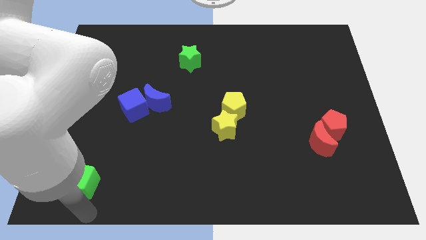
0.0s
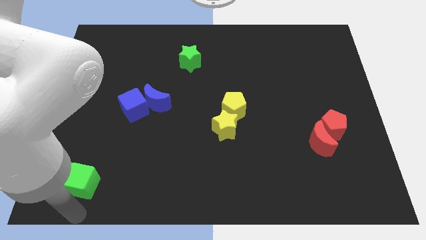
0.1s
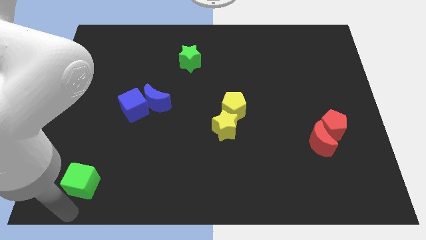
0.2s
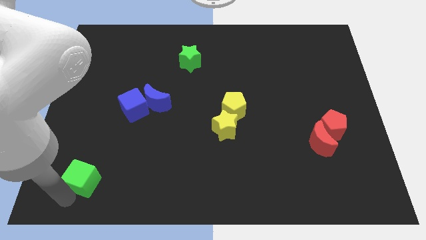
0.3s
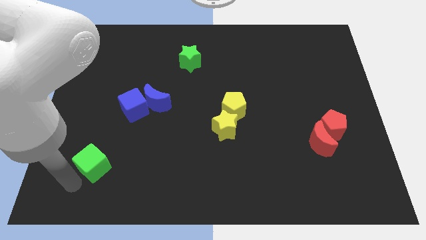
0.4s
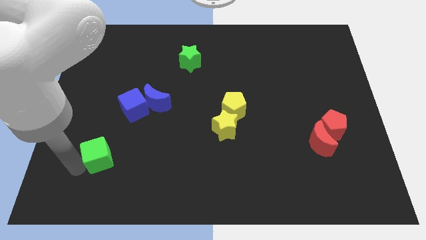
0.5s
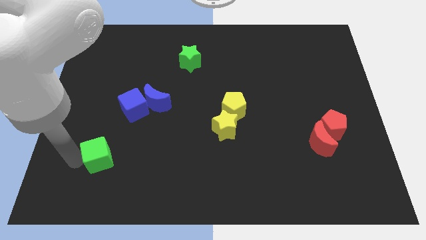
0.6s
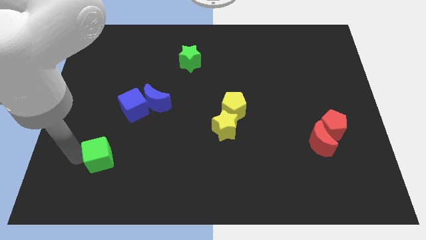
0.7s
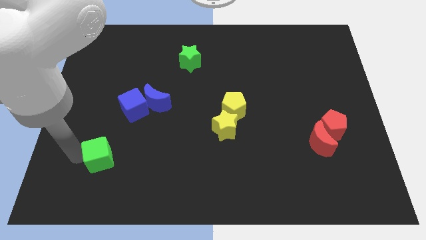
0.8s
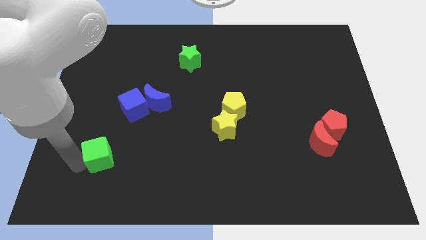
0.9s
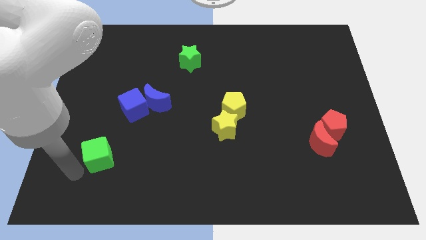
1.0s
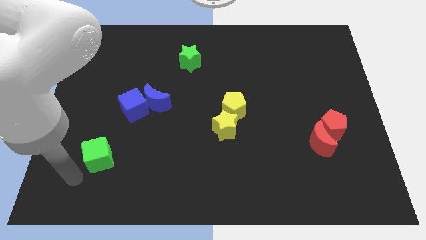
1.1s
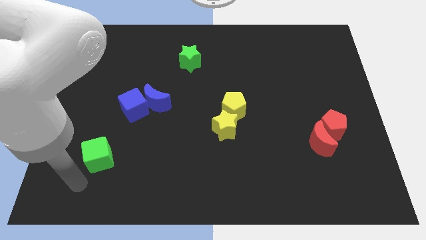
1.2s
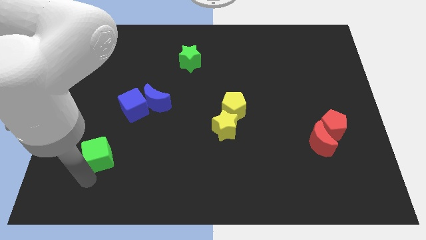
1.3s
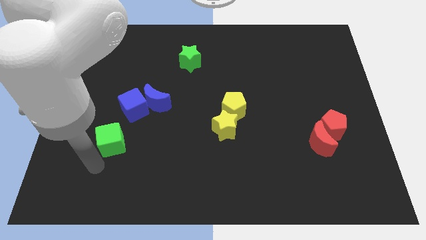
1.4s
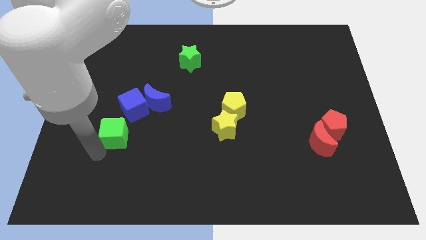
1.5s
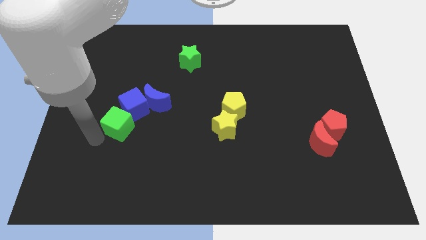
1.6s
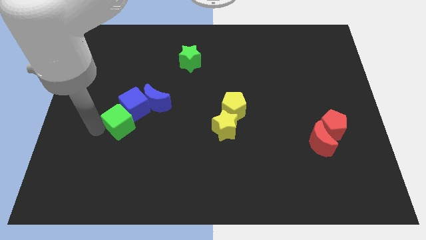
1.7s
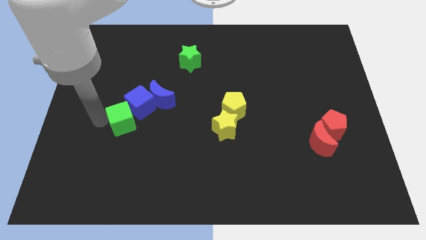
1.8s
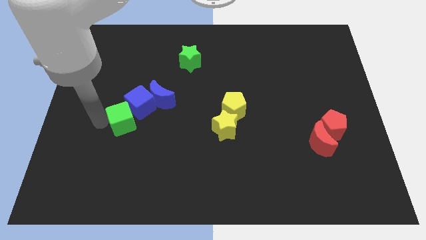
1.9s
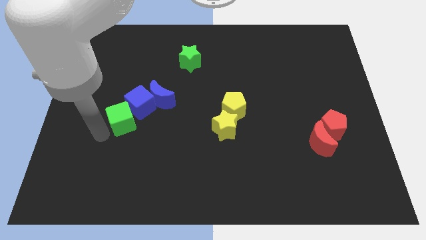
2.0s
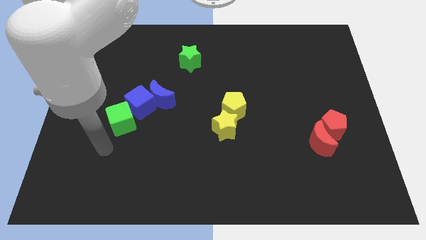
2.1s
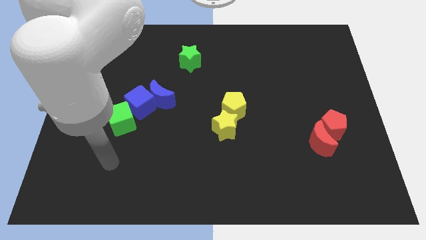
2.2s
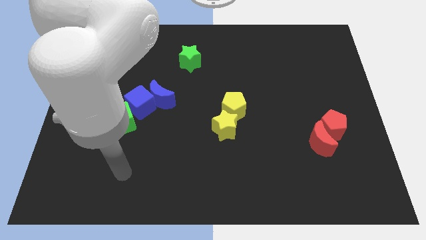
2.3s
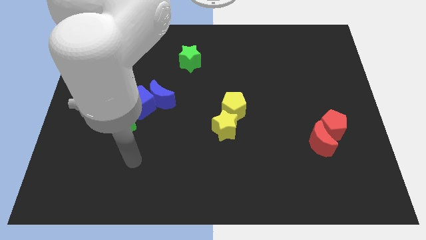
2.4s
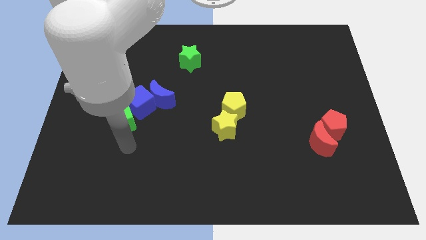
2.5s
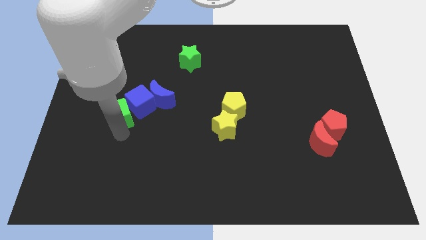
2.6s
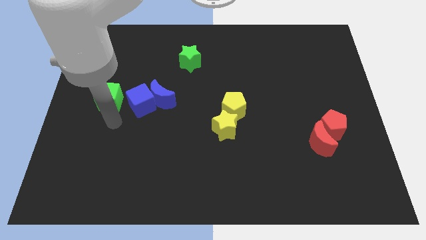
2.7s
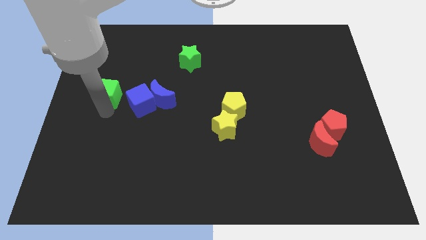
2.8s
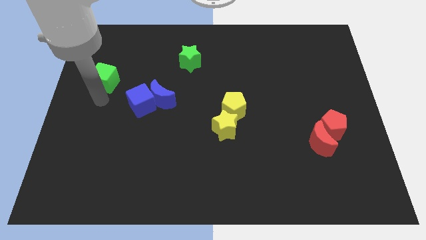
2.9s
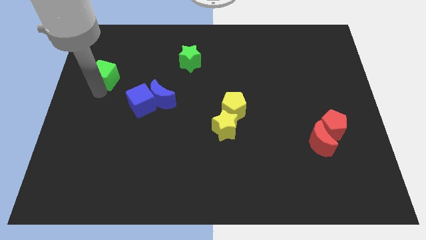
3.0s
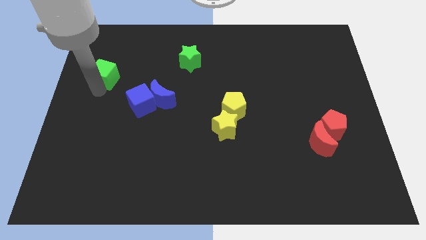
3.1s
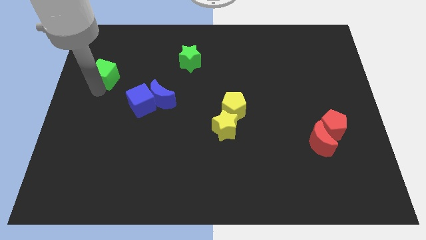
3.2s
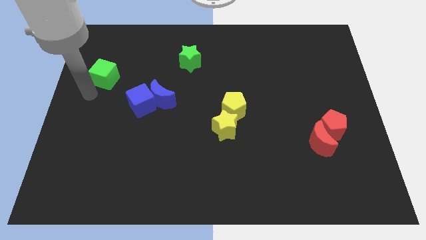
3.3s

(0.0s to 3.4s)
push the green cube to the top left side of the blue cube

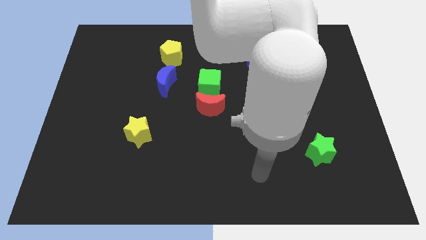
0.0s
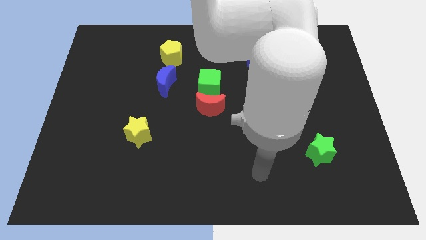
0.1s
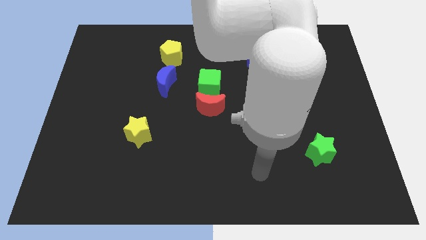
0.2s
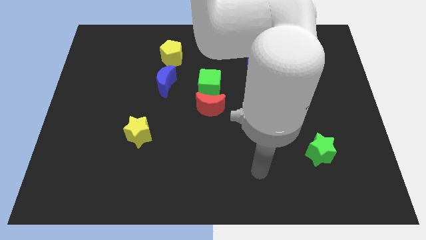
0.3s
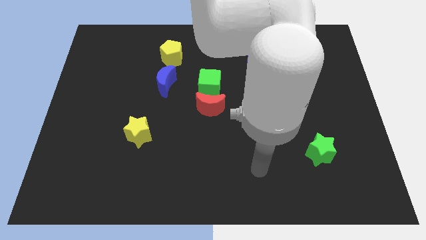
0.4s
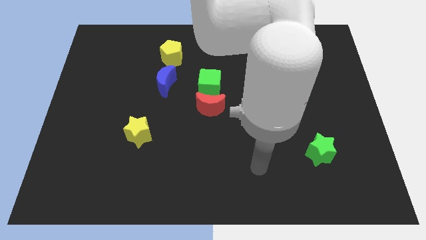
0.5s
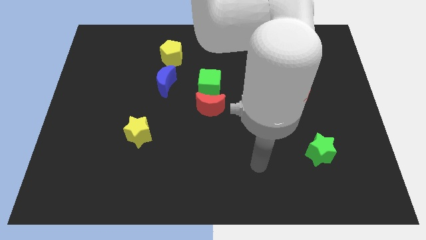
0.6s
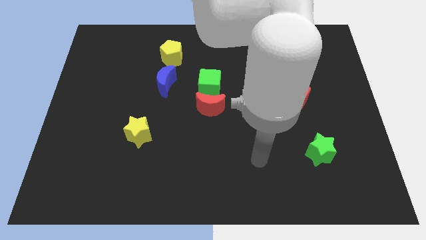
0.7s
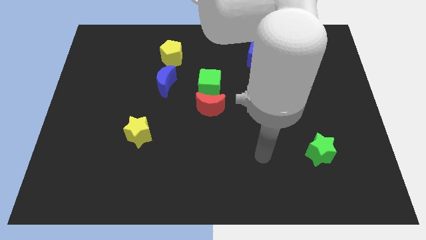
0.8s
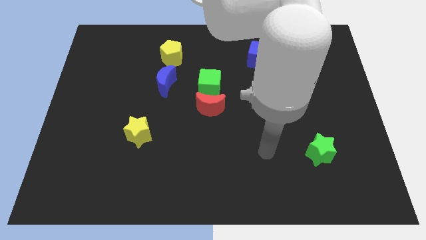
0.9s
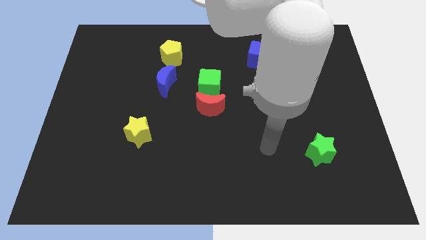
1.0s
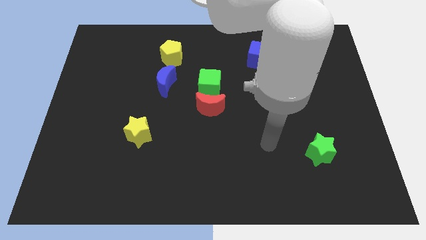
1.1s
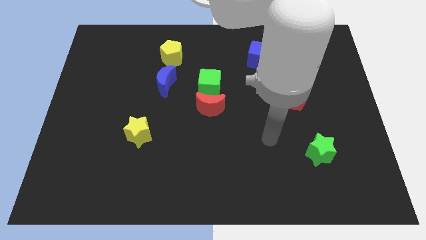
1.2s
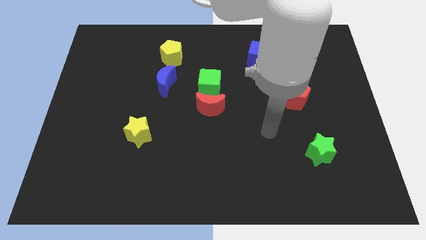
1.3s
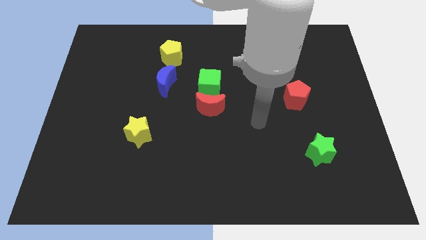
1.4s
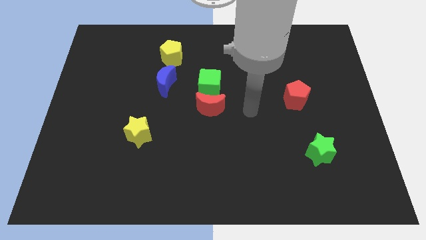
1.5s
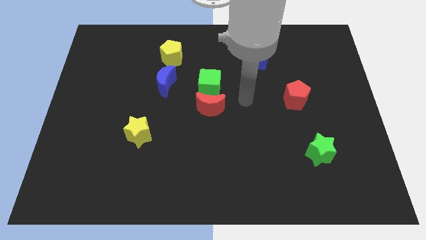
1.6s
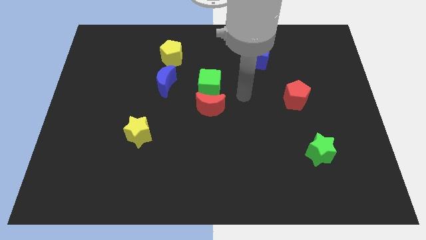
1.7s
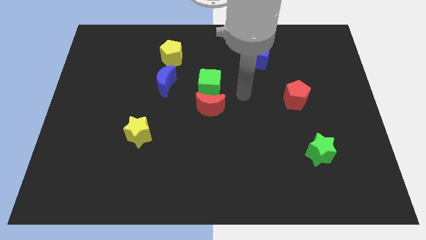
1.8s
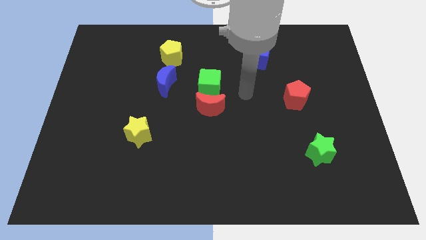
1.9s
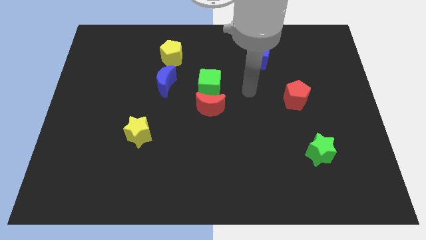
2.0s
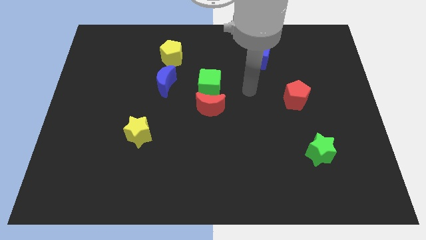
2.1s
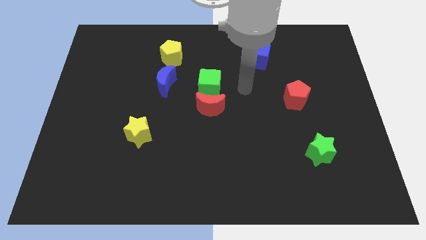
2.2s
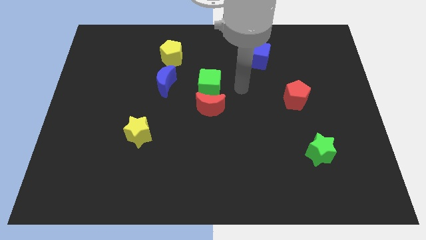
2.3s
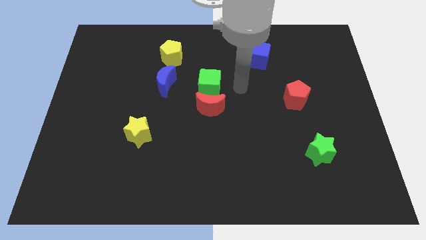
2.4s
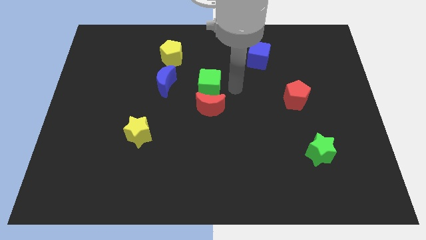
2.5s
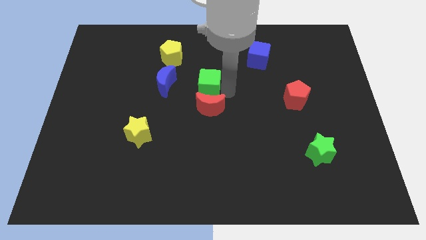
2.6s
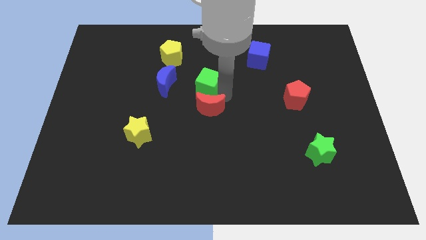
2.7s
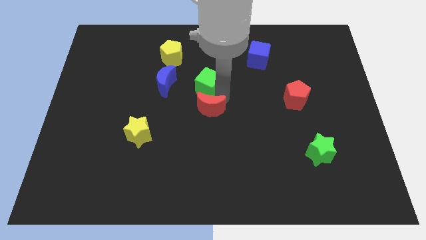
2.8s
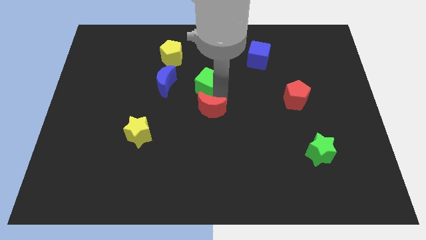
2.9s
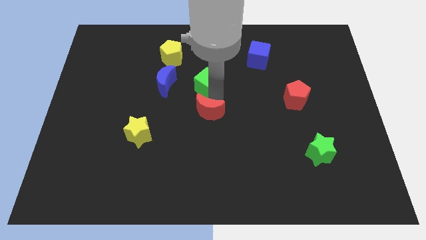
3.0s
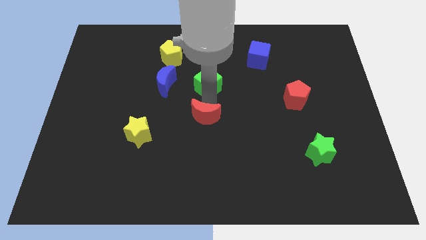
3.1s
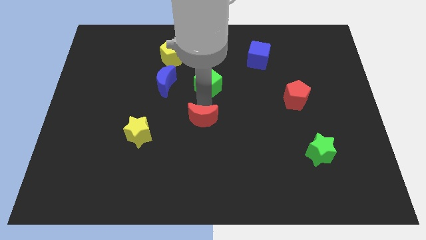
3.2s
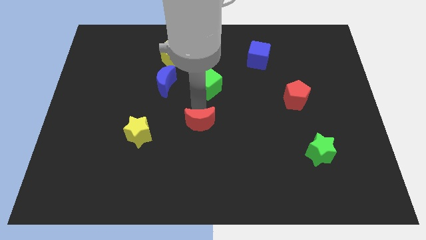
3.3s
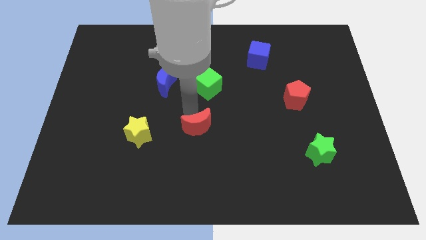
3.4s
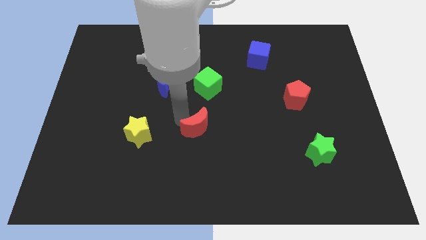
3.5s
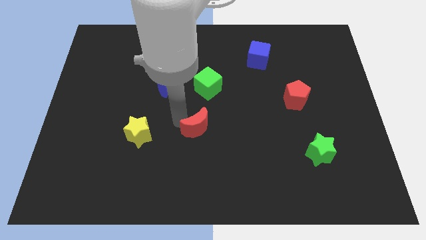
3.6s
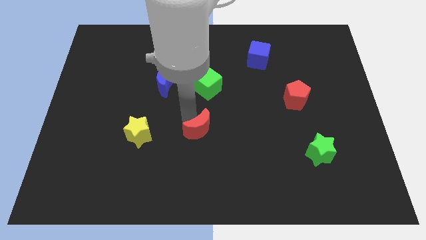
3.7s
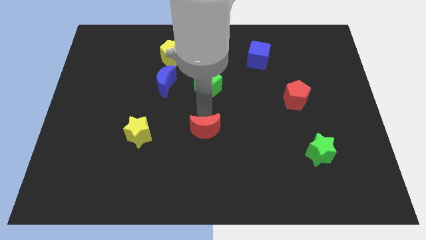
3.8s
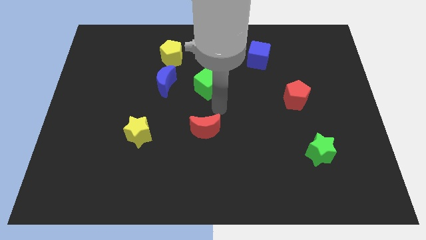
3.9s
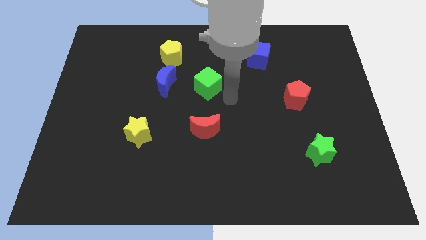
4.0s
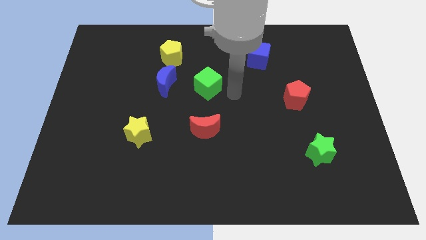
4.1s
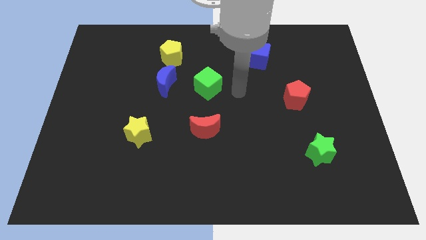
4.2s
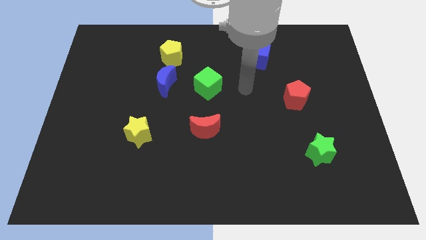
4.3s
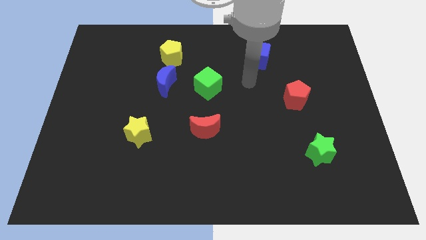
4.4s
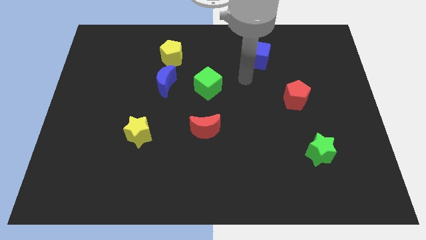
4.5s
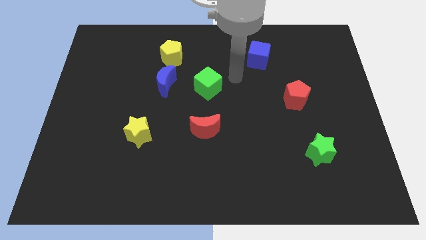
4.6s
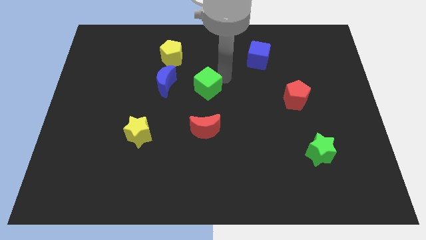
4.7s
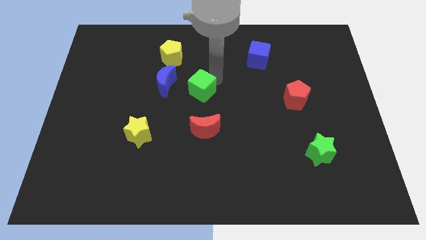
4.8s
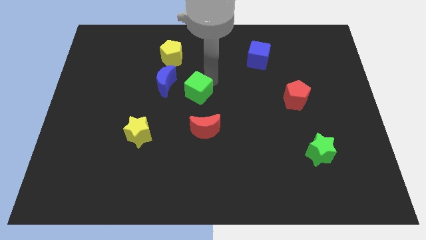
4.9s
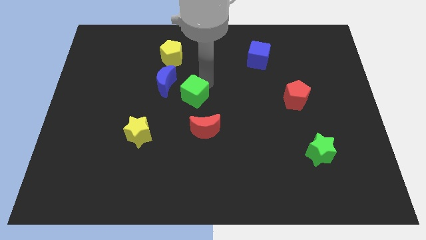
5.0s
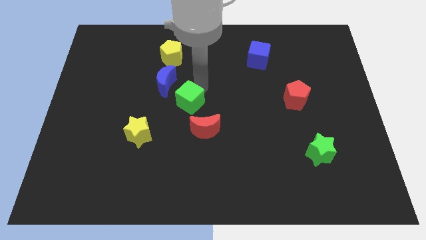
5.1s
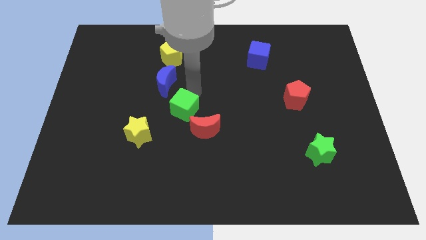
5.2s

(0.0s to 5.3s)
place the green cube in between blue crescent and red crescent

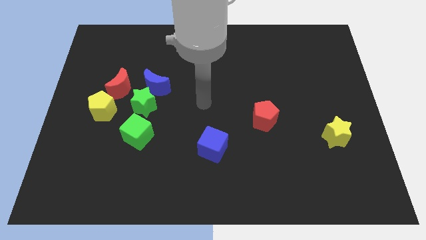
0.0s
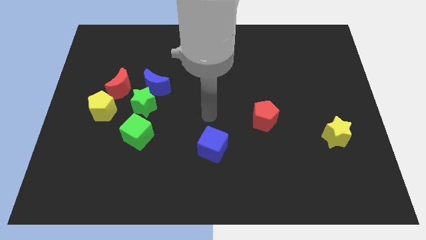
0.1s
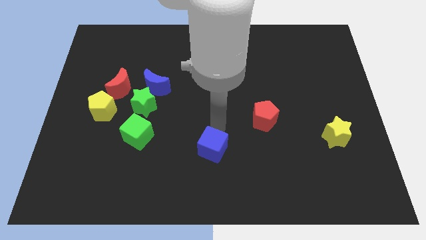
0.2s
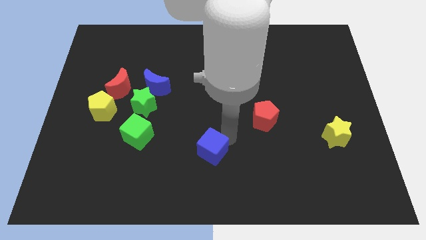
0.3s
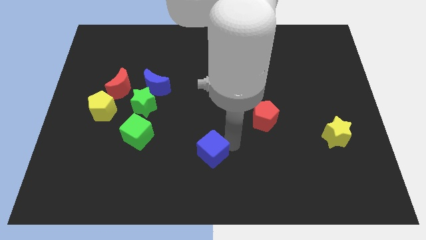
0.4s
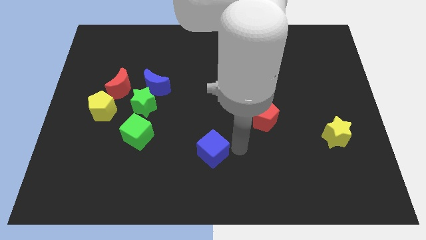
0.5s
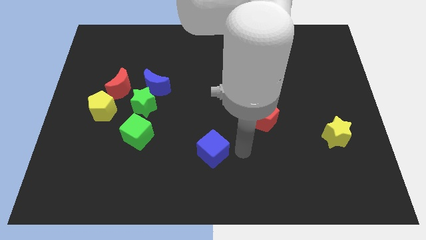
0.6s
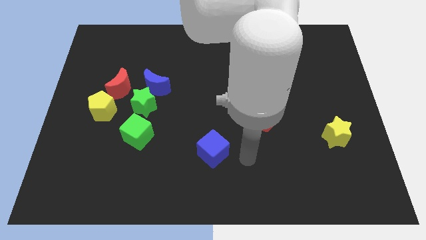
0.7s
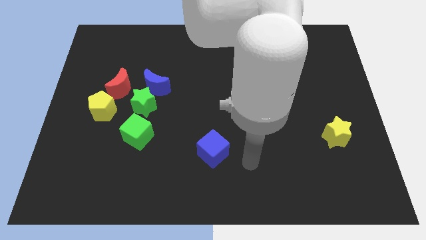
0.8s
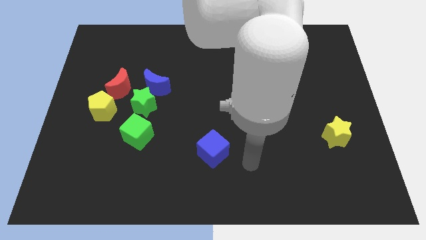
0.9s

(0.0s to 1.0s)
tap the blue cube
